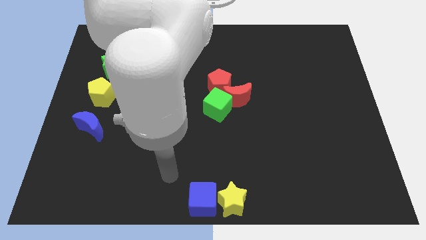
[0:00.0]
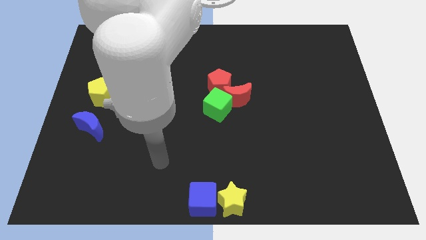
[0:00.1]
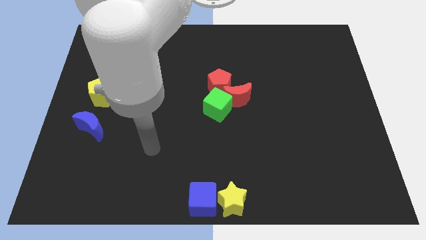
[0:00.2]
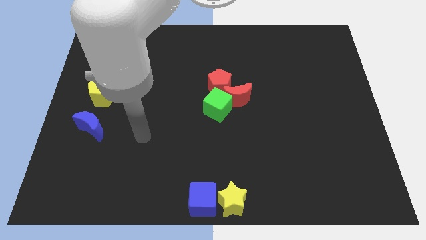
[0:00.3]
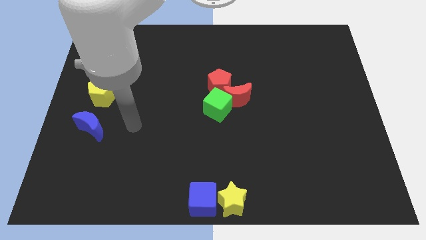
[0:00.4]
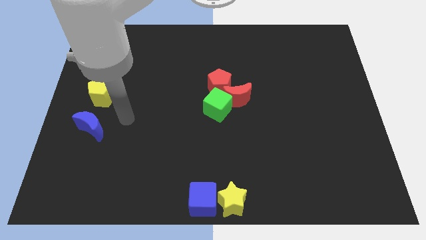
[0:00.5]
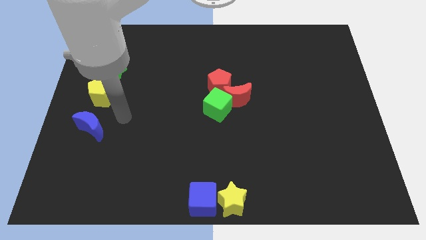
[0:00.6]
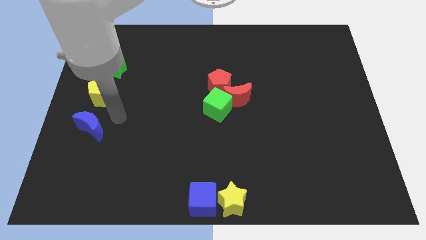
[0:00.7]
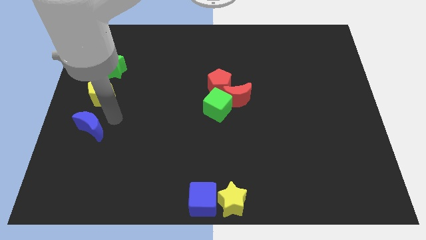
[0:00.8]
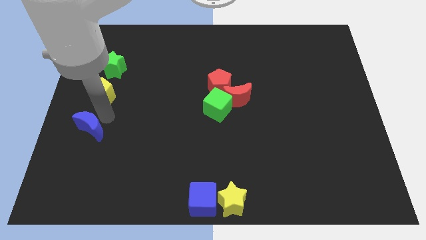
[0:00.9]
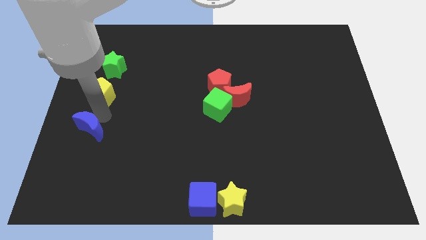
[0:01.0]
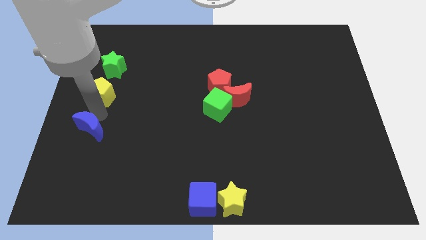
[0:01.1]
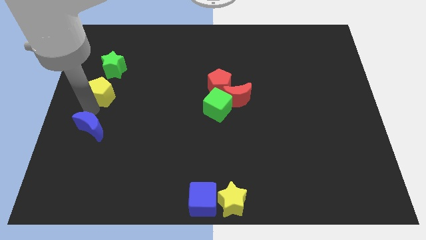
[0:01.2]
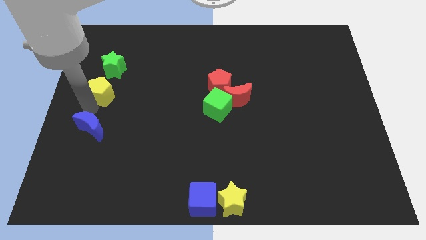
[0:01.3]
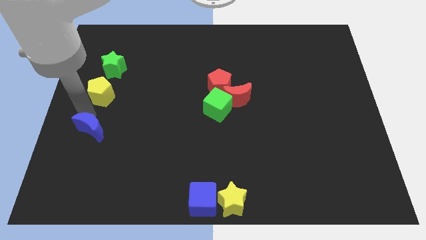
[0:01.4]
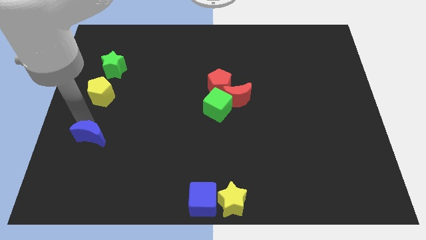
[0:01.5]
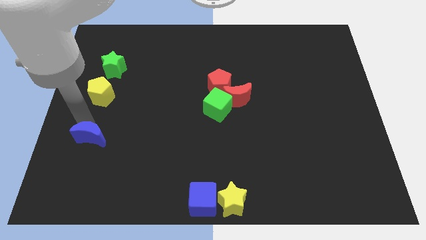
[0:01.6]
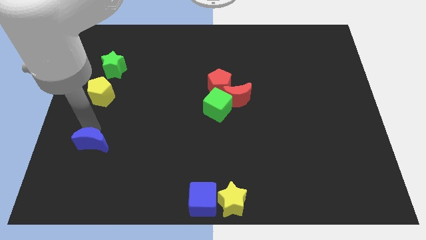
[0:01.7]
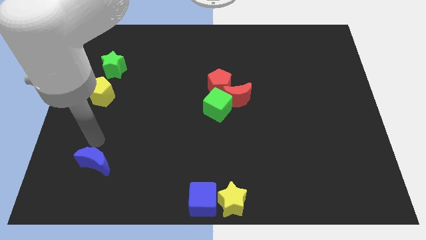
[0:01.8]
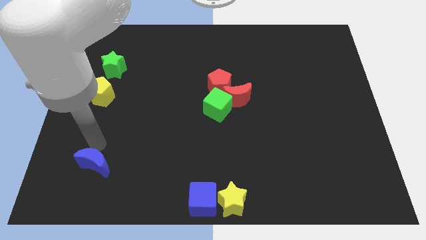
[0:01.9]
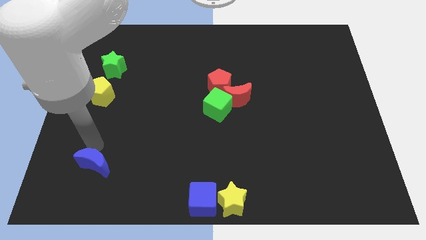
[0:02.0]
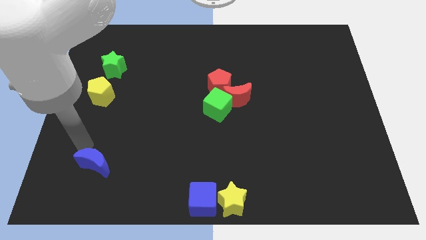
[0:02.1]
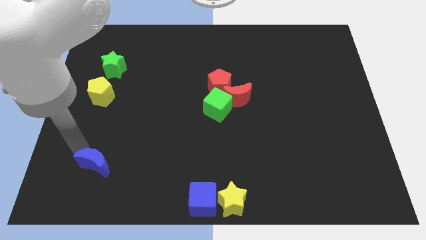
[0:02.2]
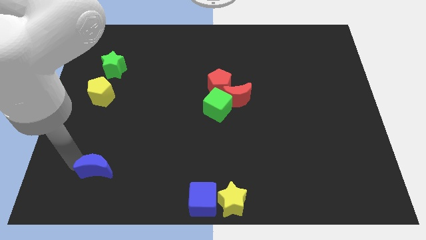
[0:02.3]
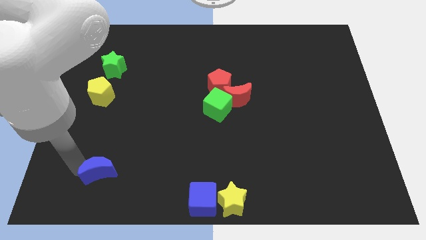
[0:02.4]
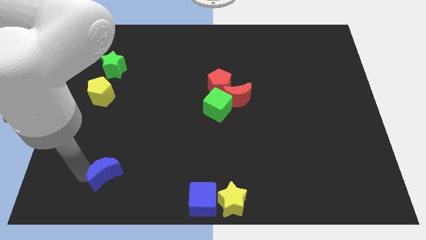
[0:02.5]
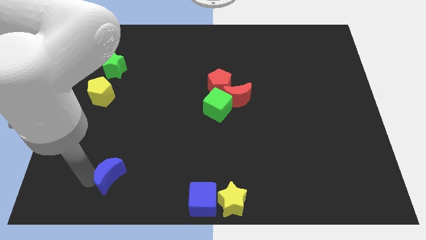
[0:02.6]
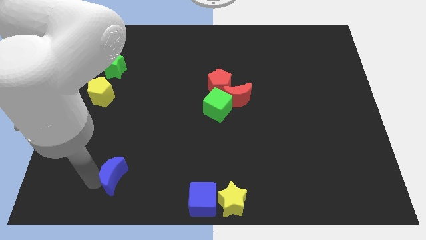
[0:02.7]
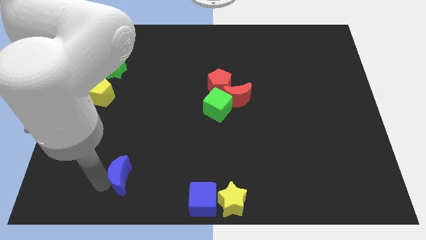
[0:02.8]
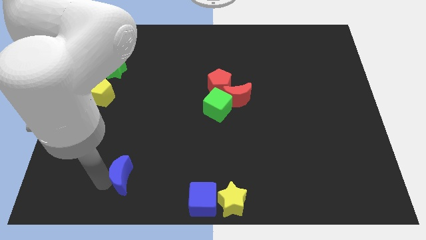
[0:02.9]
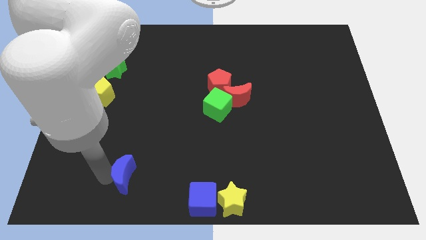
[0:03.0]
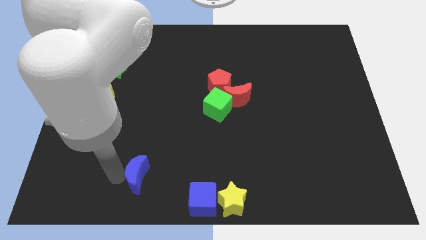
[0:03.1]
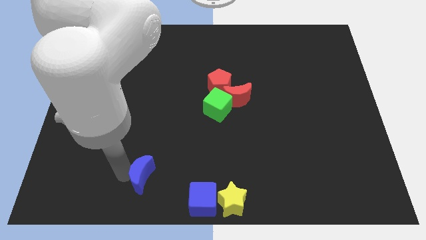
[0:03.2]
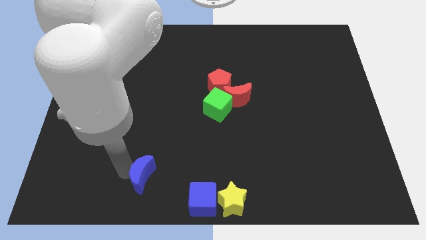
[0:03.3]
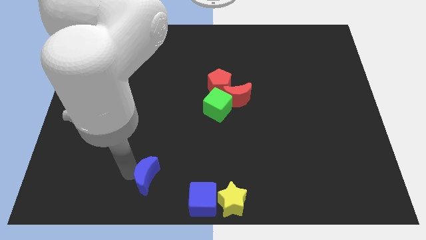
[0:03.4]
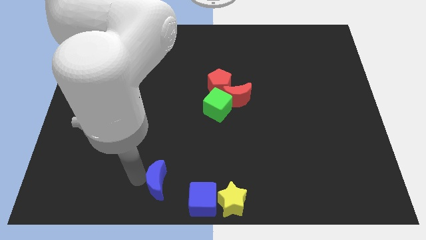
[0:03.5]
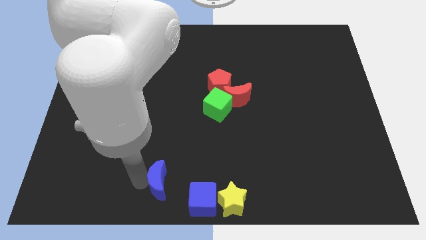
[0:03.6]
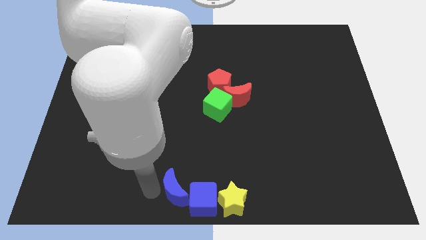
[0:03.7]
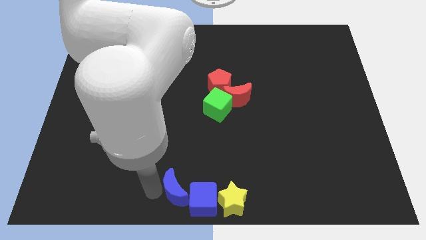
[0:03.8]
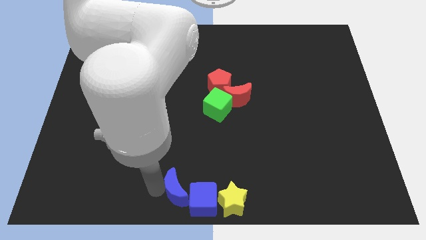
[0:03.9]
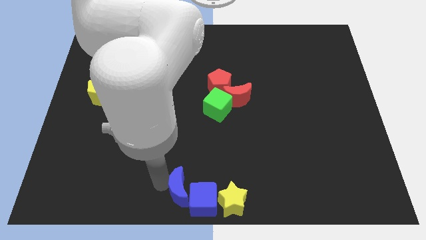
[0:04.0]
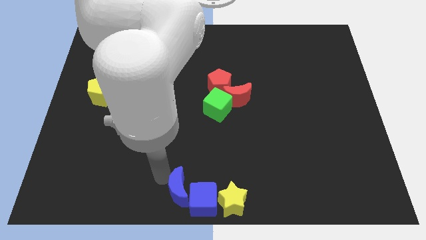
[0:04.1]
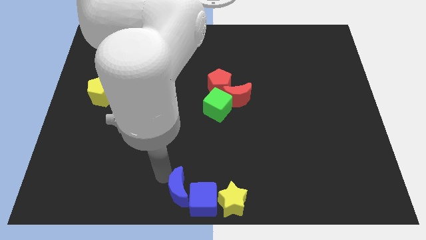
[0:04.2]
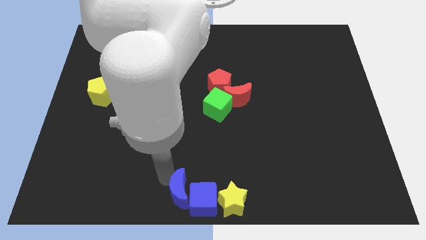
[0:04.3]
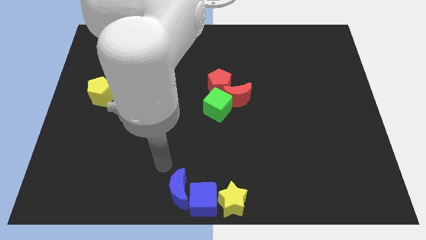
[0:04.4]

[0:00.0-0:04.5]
move the blue crescent towards the blue cube

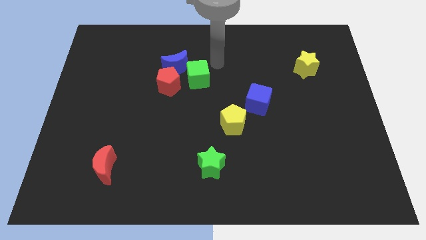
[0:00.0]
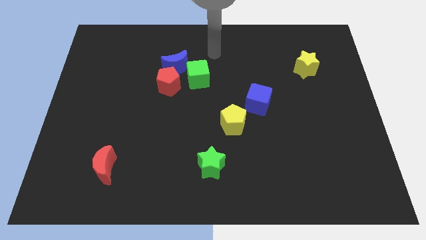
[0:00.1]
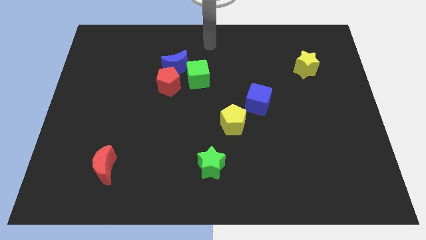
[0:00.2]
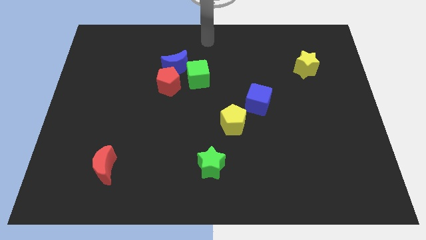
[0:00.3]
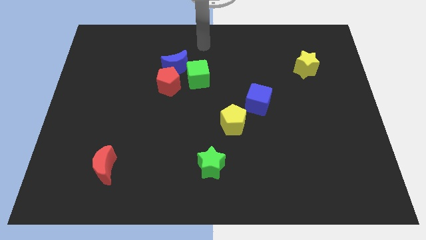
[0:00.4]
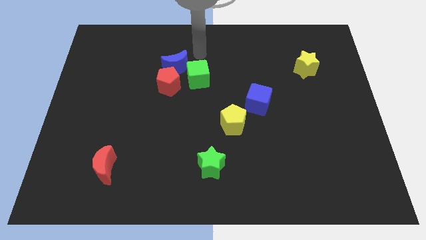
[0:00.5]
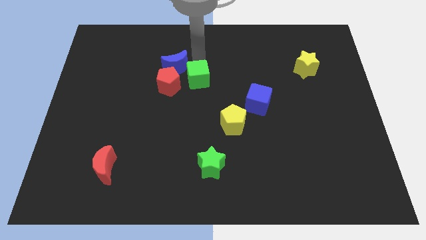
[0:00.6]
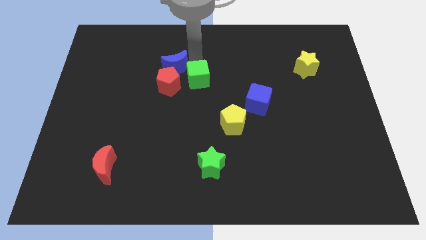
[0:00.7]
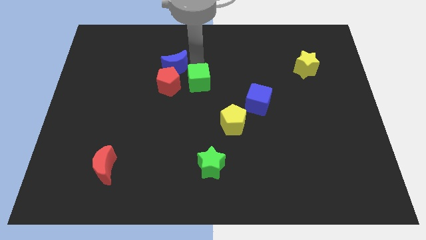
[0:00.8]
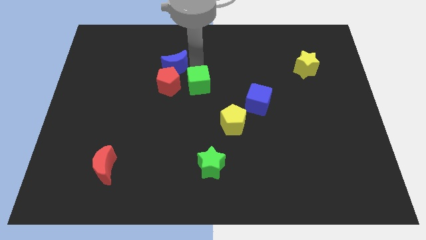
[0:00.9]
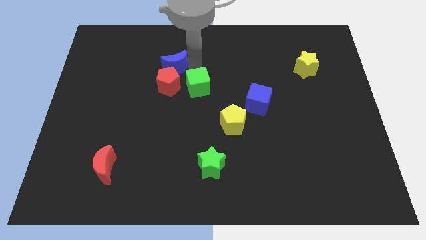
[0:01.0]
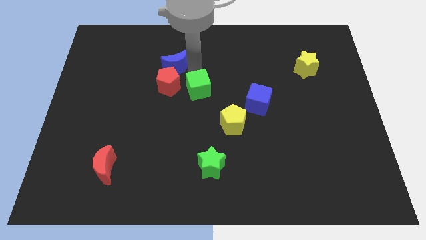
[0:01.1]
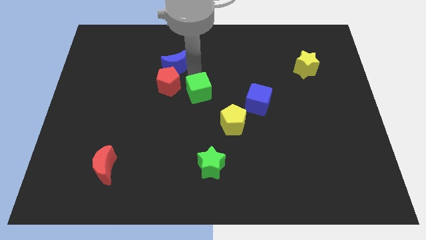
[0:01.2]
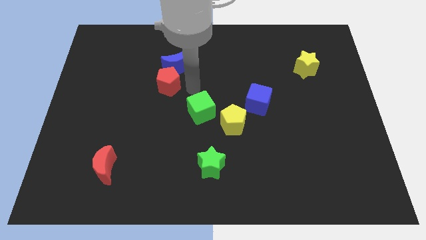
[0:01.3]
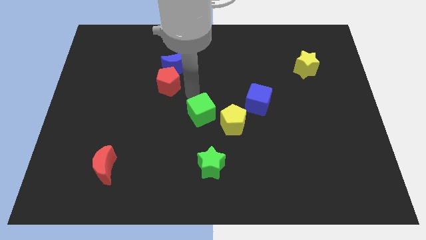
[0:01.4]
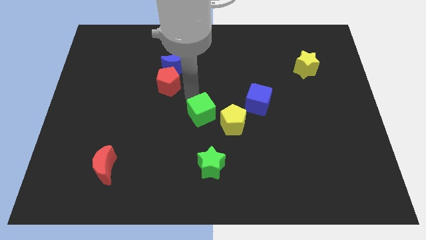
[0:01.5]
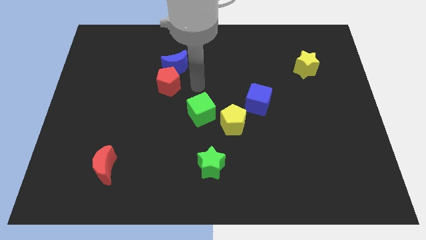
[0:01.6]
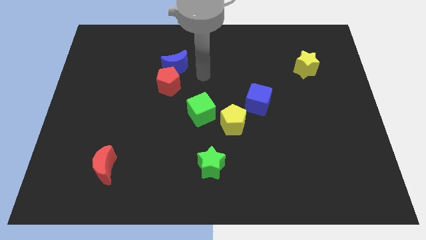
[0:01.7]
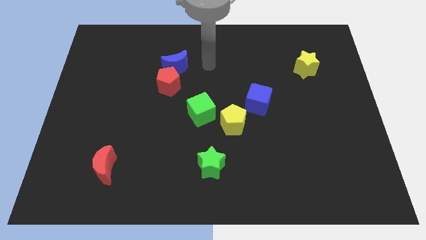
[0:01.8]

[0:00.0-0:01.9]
move the green cube towards the center of the board

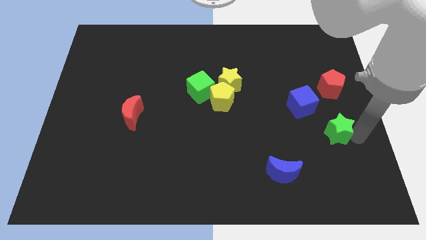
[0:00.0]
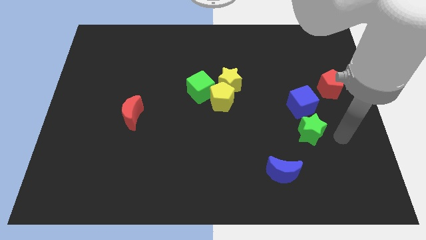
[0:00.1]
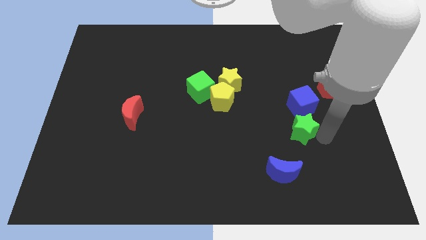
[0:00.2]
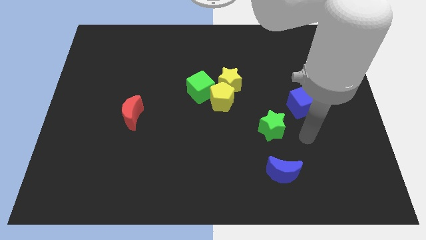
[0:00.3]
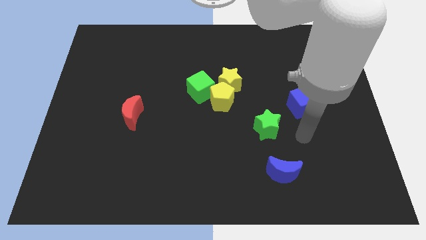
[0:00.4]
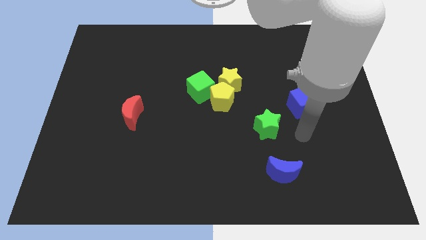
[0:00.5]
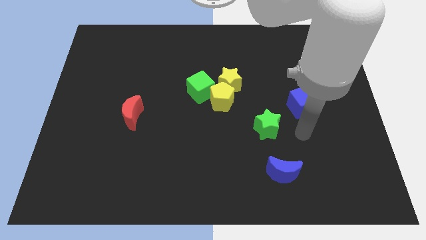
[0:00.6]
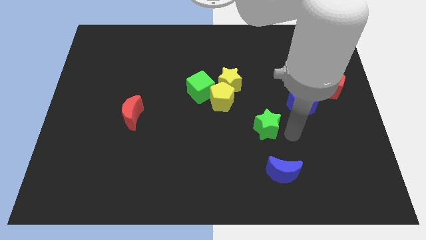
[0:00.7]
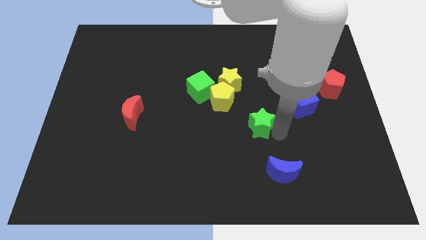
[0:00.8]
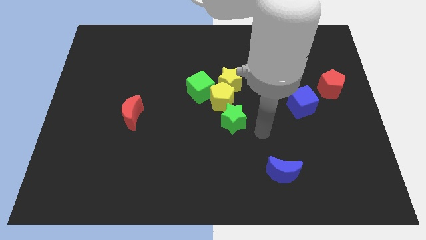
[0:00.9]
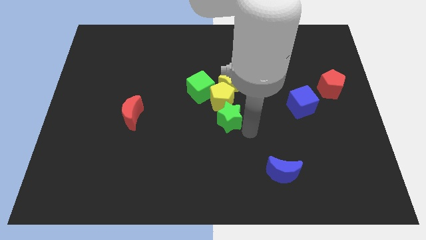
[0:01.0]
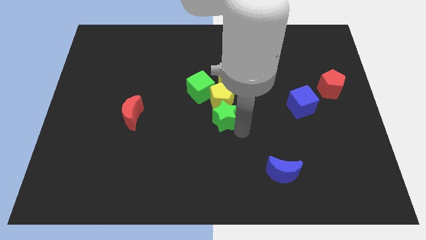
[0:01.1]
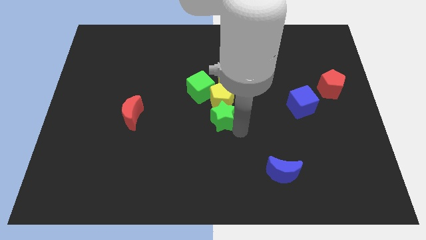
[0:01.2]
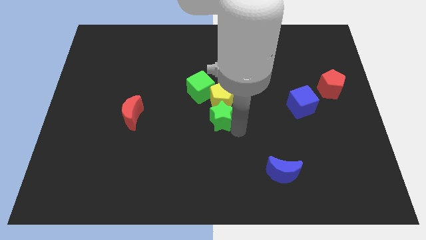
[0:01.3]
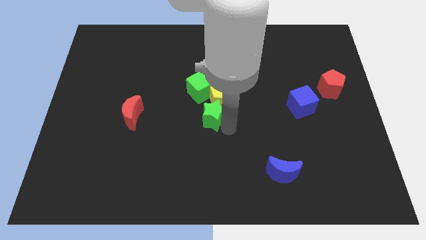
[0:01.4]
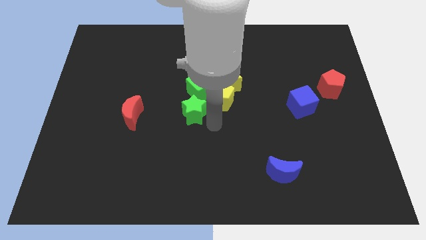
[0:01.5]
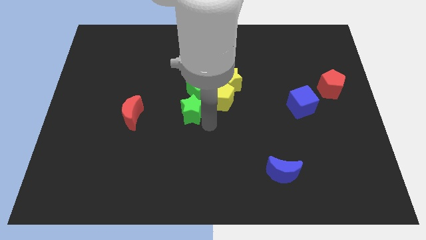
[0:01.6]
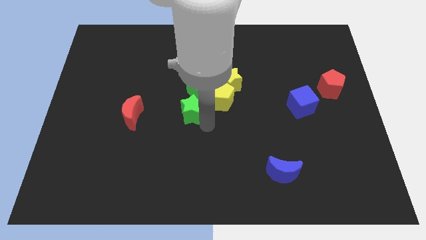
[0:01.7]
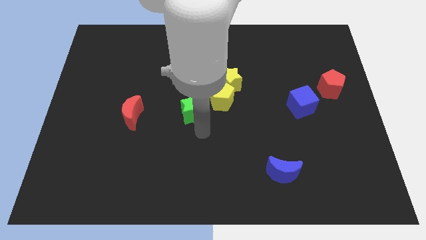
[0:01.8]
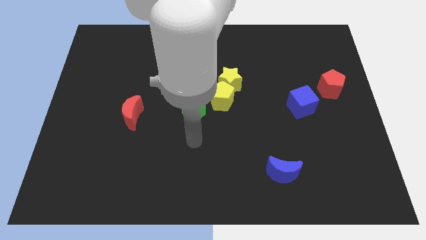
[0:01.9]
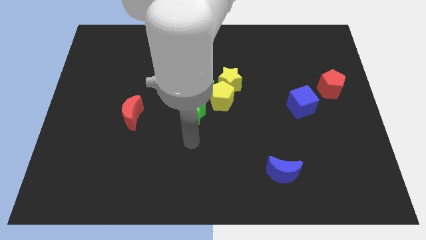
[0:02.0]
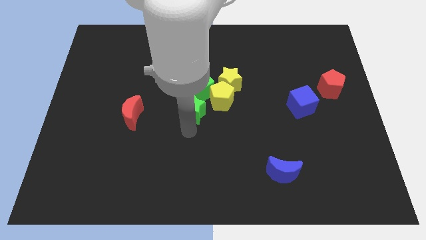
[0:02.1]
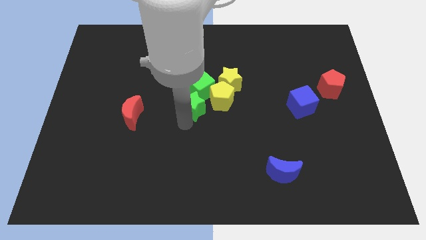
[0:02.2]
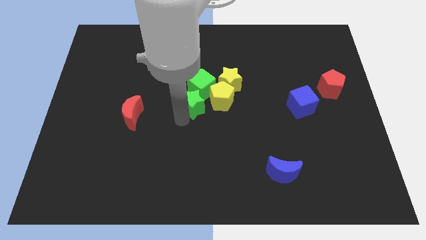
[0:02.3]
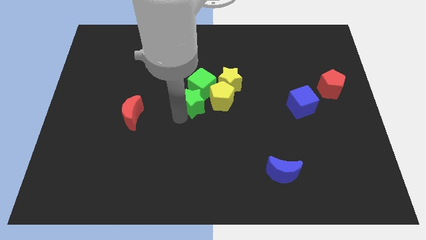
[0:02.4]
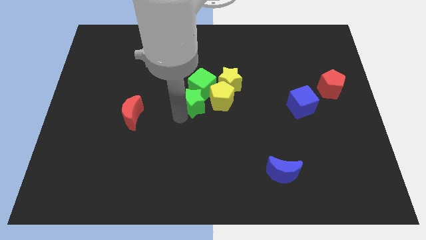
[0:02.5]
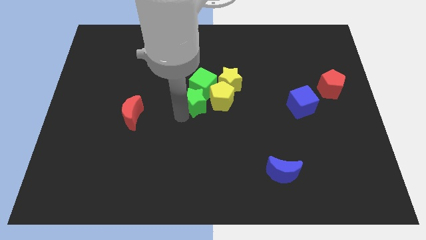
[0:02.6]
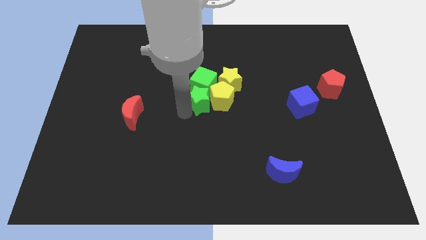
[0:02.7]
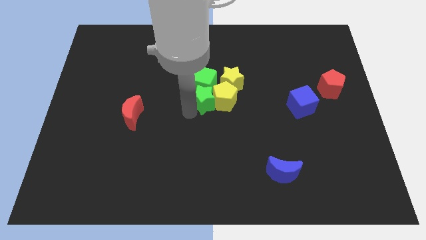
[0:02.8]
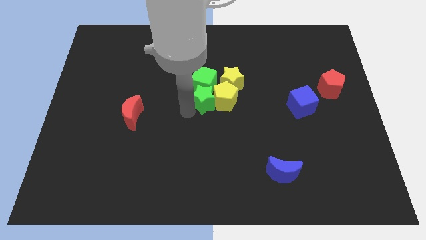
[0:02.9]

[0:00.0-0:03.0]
put the green star into green cube at the center
